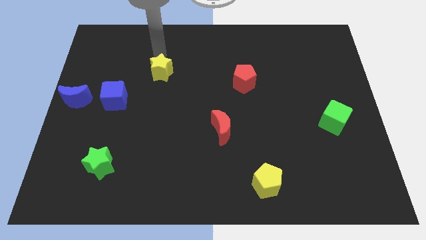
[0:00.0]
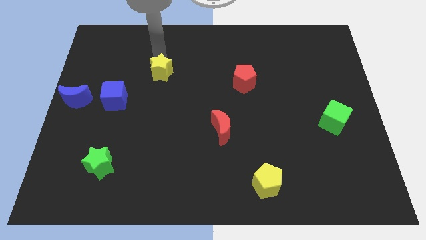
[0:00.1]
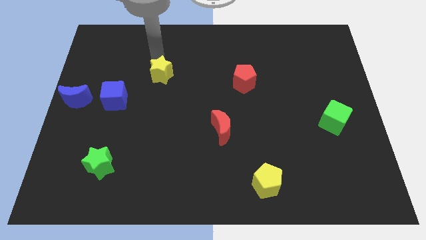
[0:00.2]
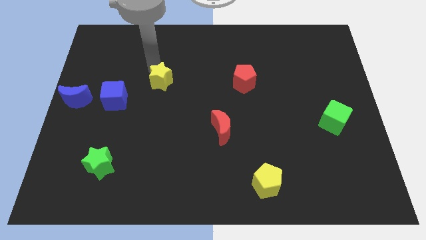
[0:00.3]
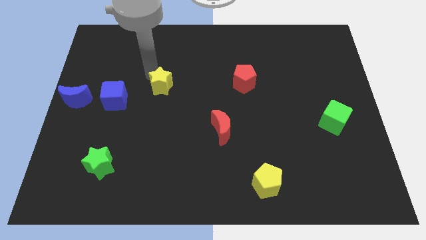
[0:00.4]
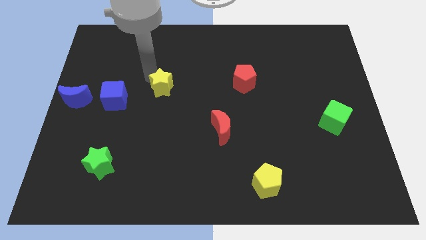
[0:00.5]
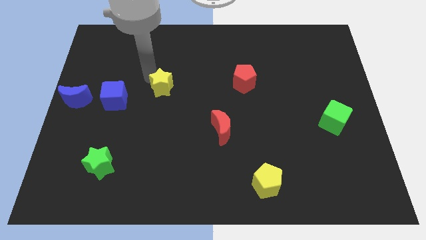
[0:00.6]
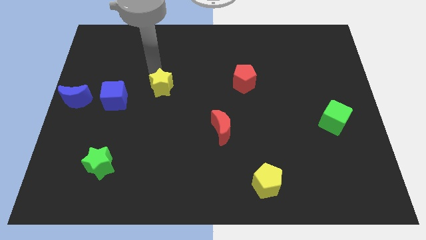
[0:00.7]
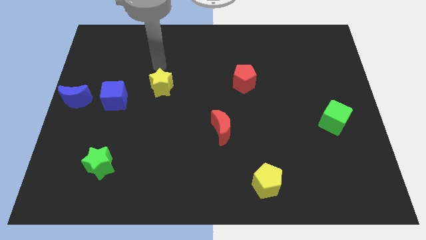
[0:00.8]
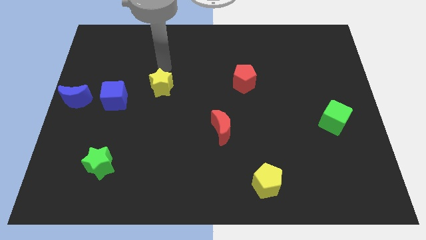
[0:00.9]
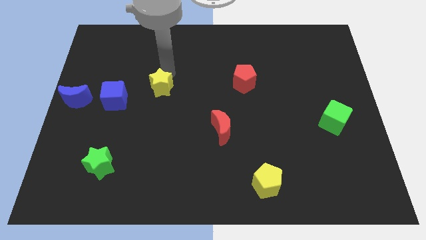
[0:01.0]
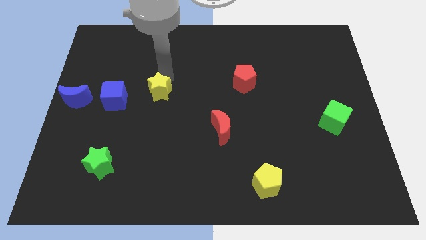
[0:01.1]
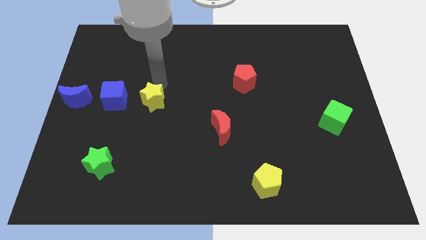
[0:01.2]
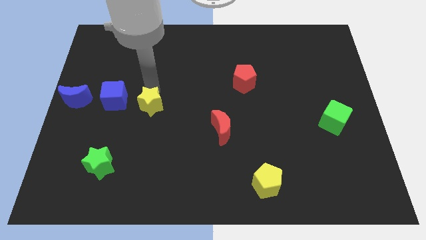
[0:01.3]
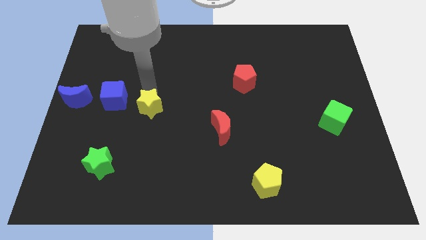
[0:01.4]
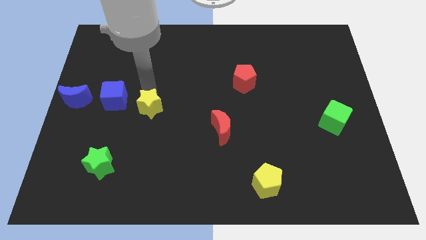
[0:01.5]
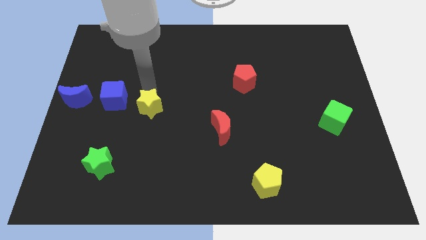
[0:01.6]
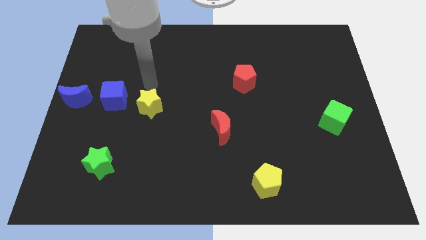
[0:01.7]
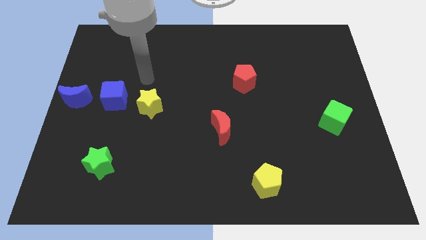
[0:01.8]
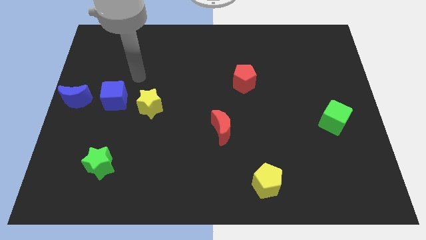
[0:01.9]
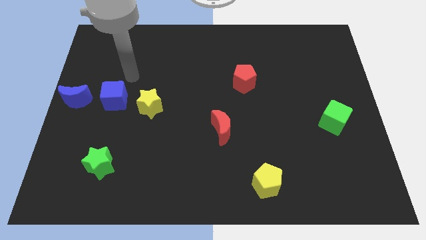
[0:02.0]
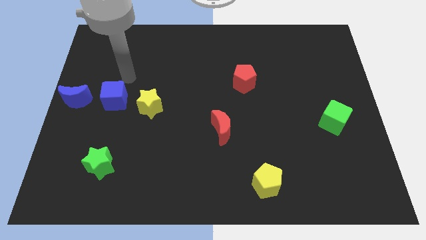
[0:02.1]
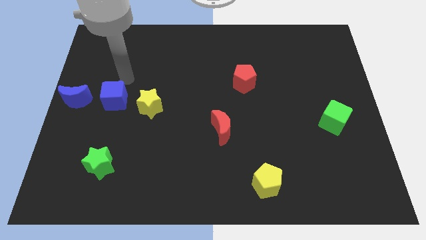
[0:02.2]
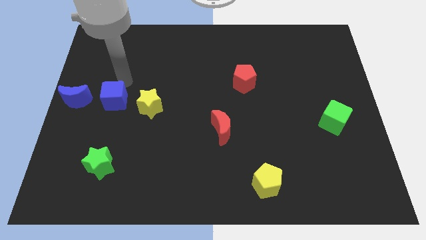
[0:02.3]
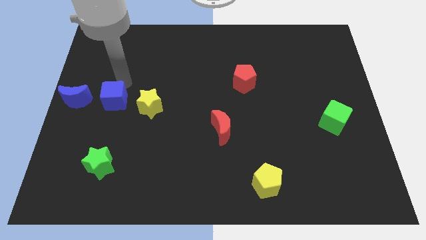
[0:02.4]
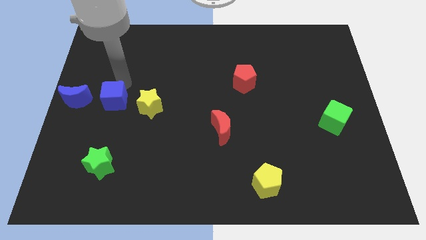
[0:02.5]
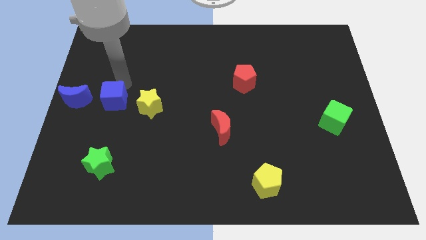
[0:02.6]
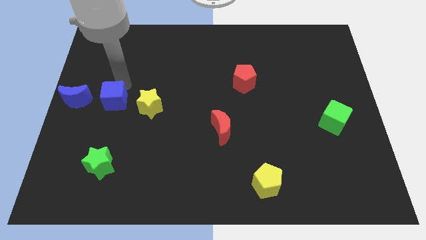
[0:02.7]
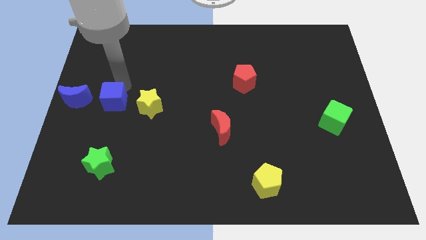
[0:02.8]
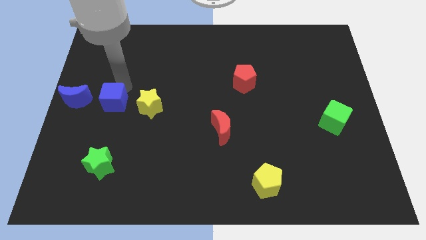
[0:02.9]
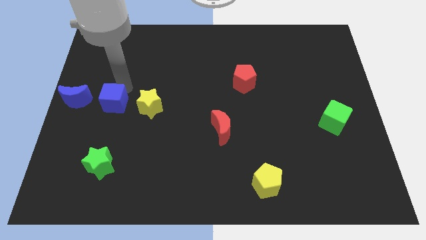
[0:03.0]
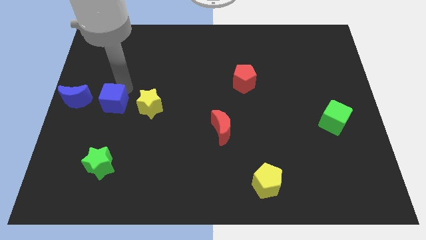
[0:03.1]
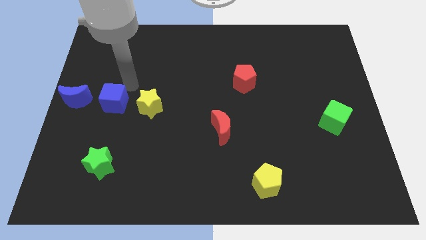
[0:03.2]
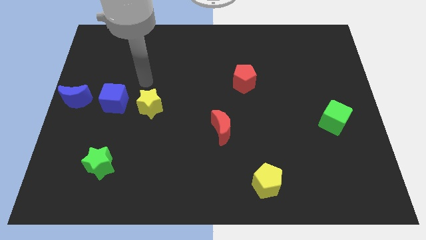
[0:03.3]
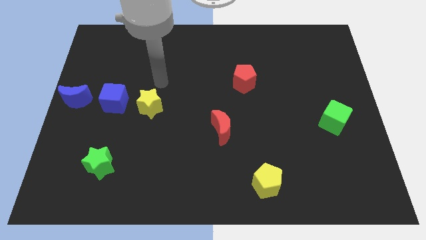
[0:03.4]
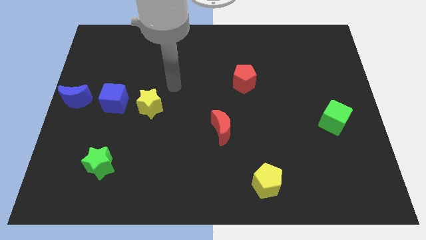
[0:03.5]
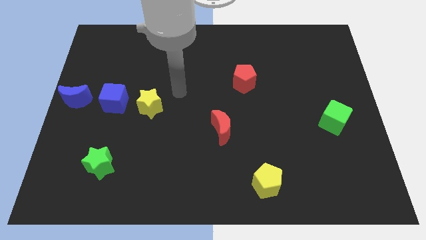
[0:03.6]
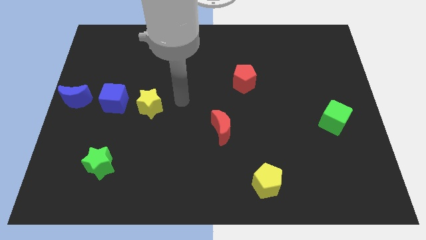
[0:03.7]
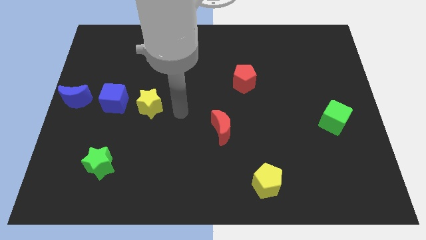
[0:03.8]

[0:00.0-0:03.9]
move the yellow star right to the blue cube

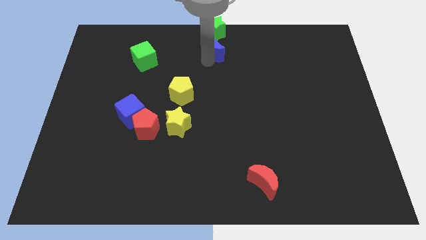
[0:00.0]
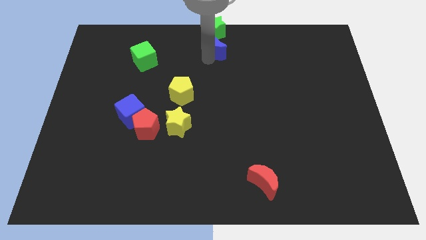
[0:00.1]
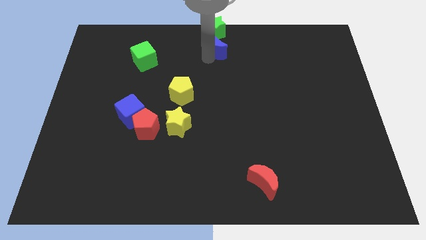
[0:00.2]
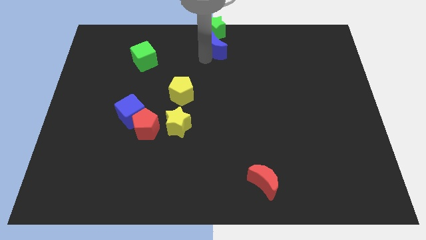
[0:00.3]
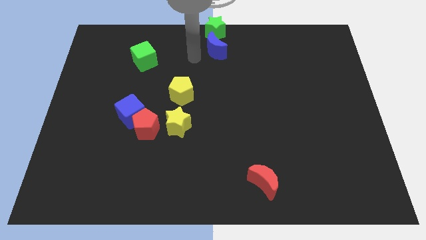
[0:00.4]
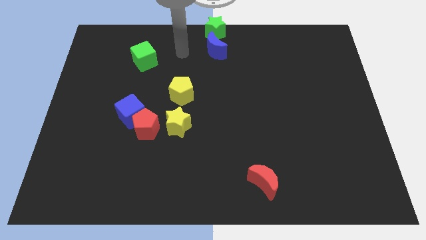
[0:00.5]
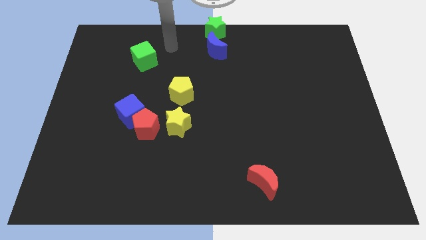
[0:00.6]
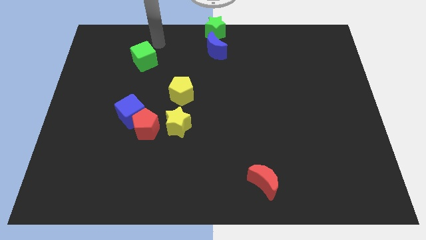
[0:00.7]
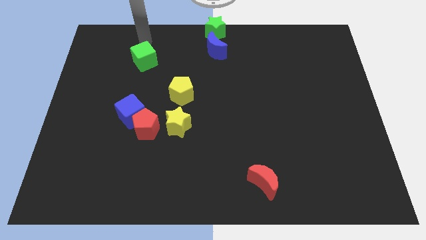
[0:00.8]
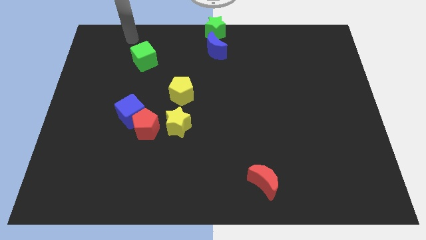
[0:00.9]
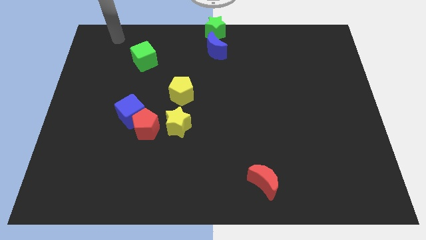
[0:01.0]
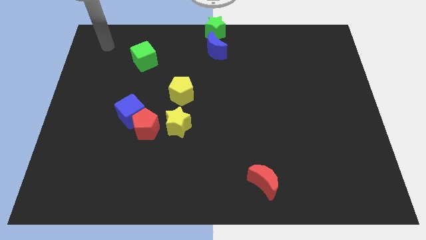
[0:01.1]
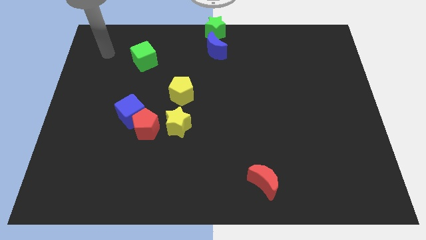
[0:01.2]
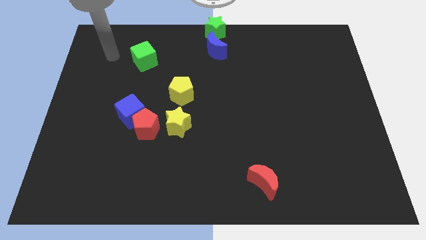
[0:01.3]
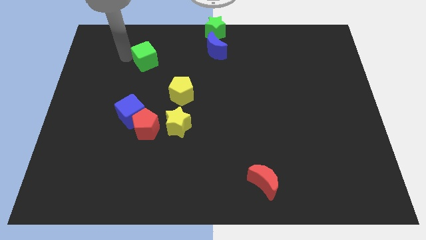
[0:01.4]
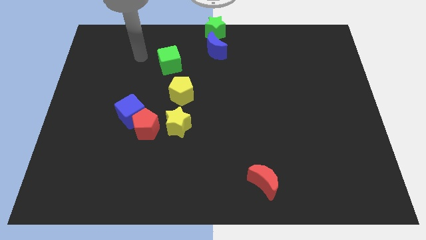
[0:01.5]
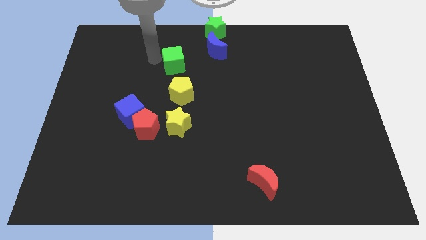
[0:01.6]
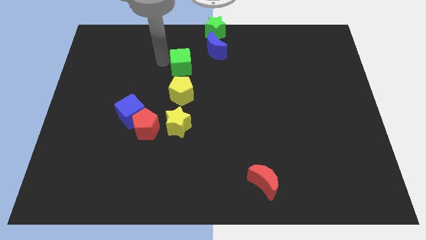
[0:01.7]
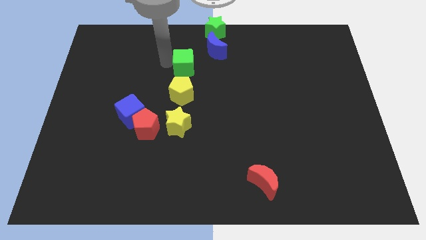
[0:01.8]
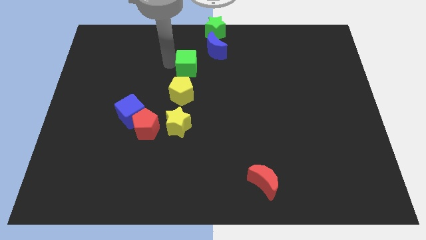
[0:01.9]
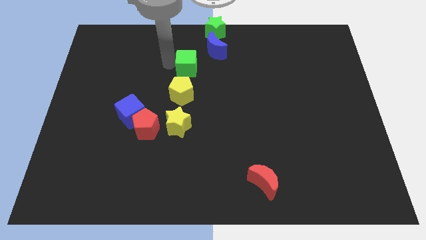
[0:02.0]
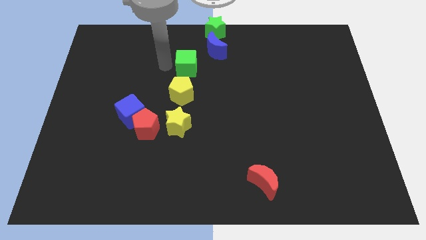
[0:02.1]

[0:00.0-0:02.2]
move the green cube above the yellow pentagon

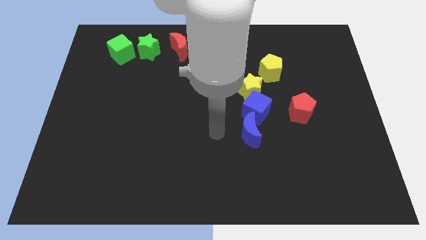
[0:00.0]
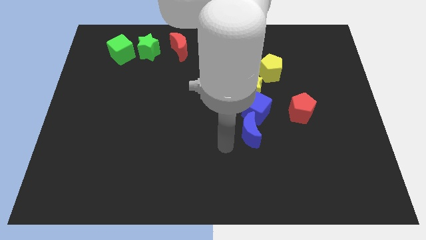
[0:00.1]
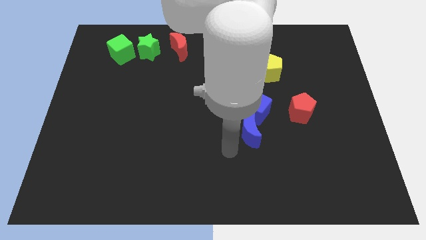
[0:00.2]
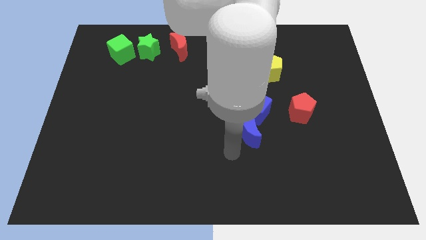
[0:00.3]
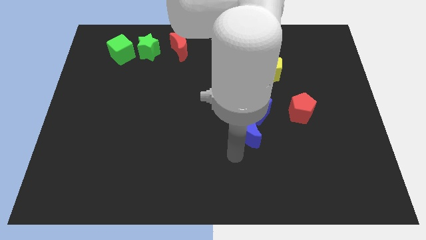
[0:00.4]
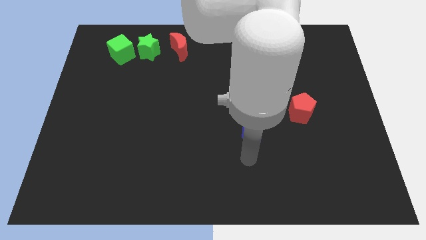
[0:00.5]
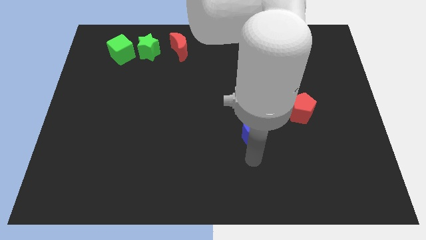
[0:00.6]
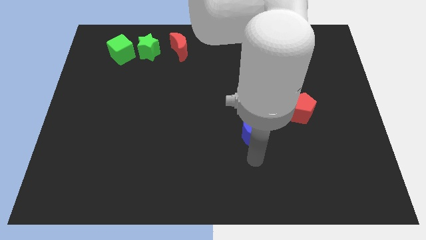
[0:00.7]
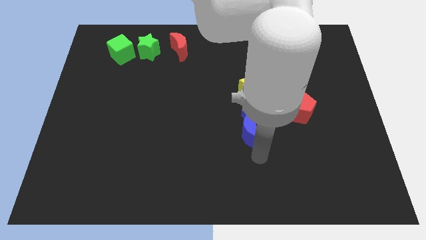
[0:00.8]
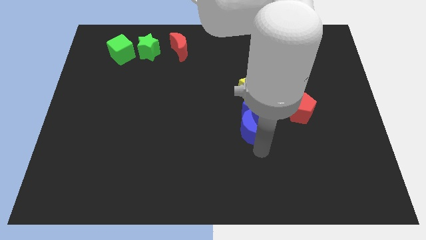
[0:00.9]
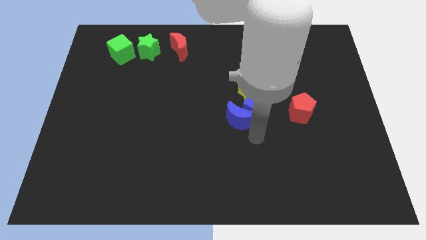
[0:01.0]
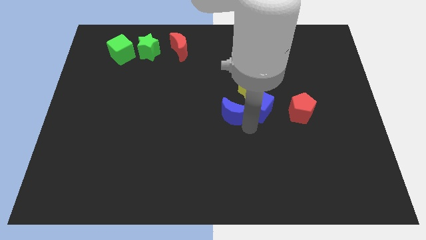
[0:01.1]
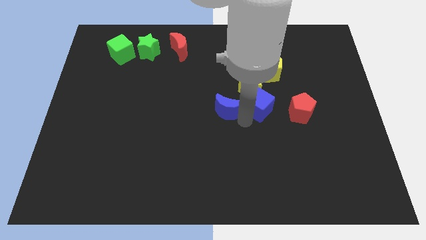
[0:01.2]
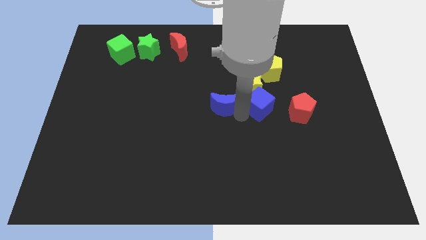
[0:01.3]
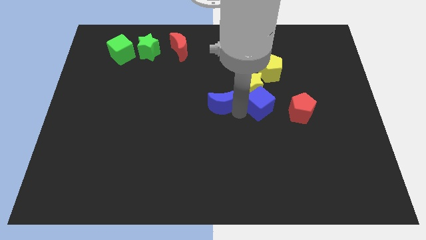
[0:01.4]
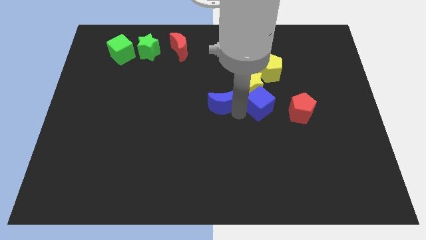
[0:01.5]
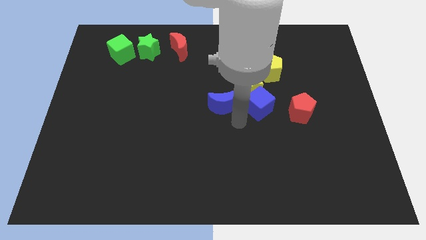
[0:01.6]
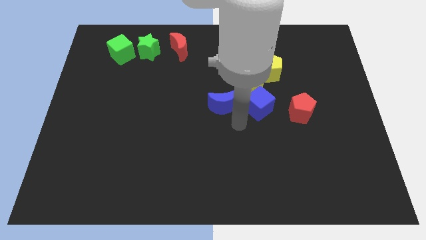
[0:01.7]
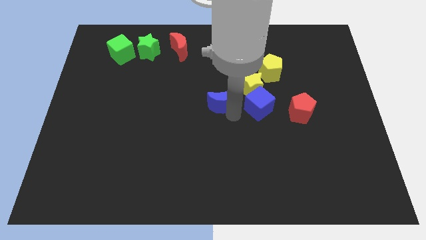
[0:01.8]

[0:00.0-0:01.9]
place the blue crescent to the left side of the blue cube

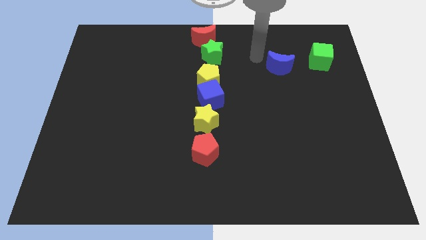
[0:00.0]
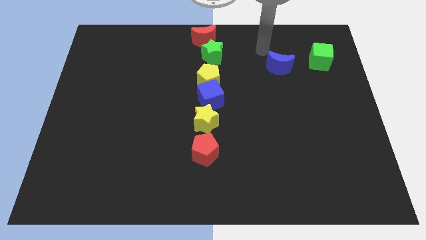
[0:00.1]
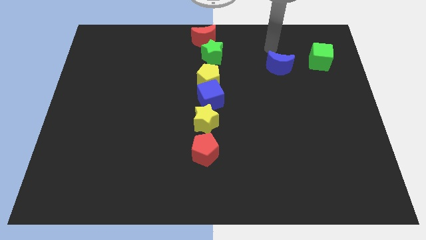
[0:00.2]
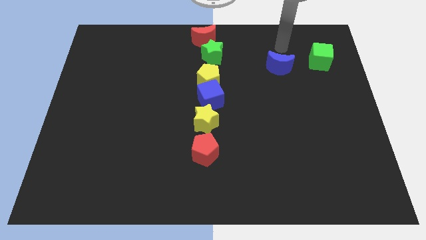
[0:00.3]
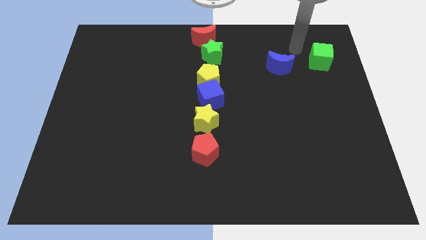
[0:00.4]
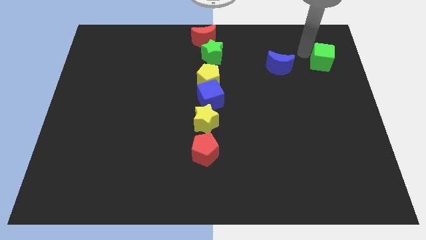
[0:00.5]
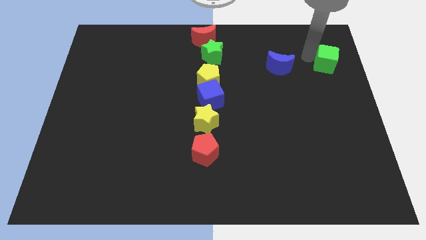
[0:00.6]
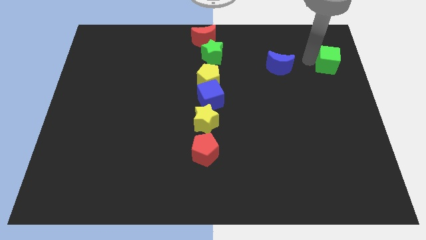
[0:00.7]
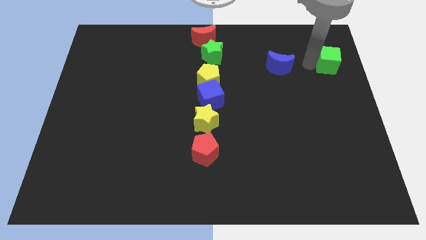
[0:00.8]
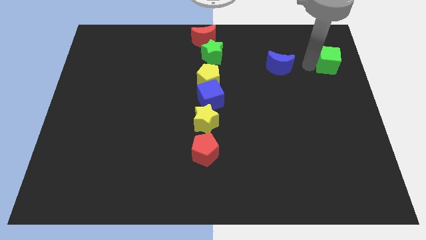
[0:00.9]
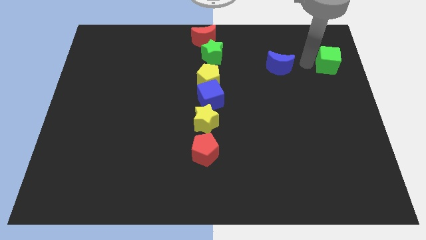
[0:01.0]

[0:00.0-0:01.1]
slightly push the green cube towards the right side of the board
